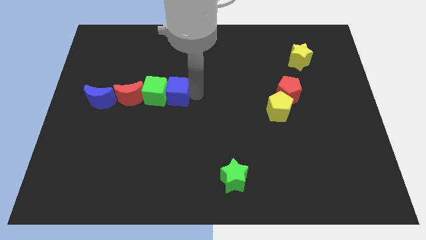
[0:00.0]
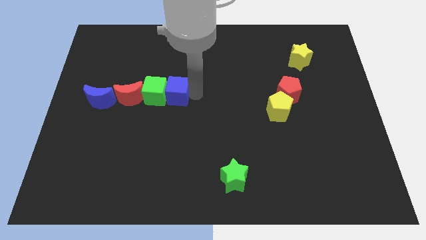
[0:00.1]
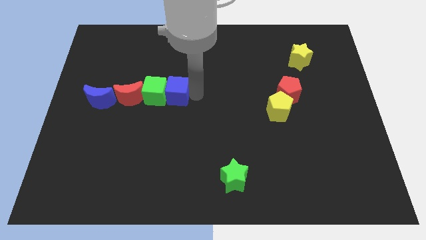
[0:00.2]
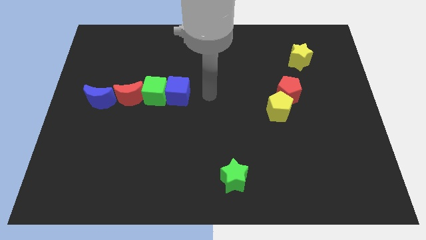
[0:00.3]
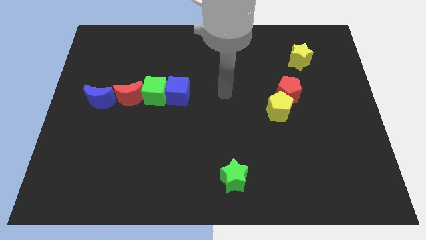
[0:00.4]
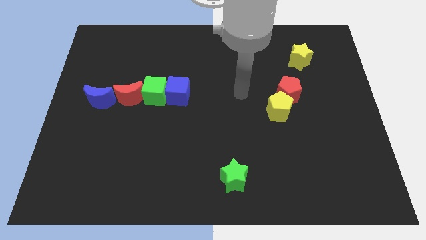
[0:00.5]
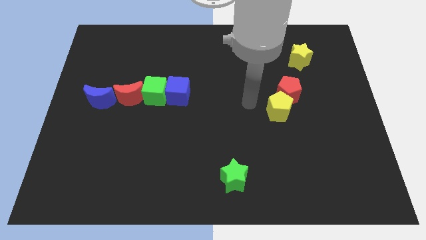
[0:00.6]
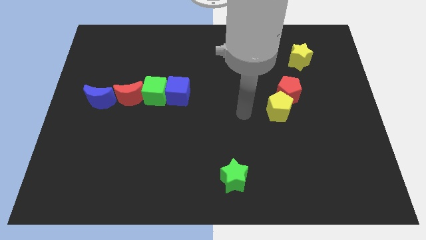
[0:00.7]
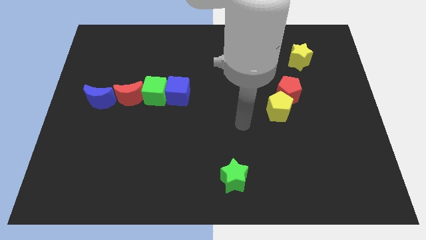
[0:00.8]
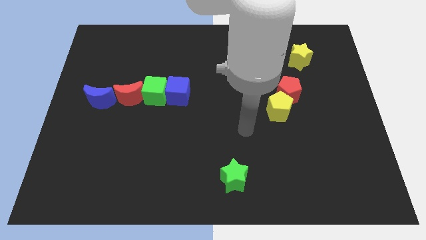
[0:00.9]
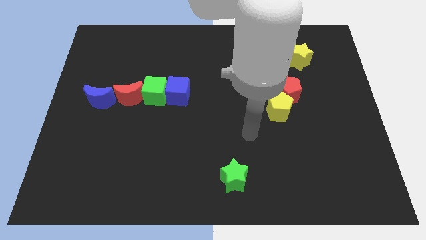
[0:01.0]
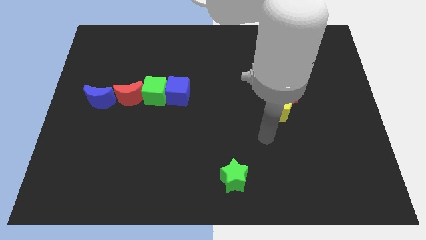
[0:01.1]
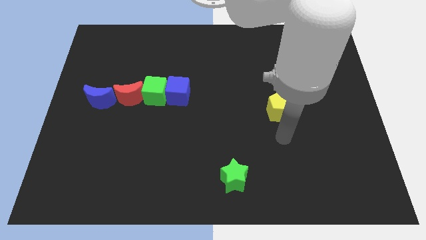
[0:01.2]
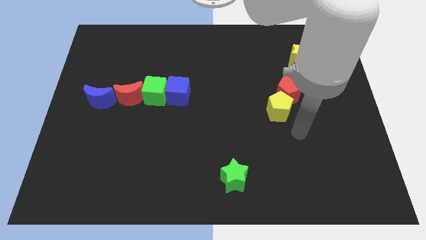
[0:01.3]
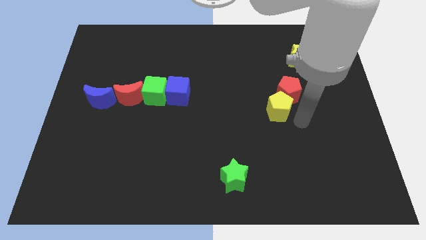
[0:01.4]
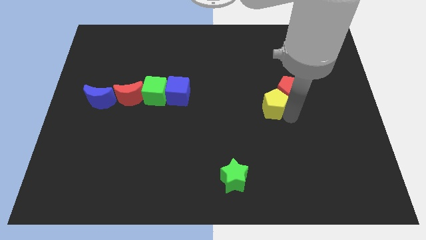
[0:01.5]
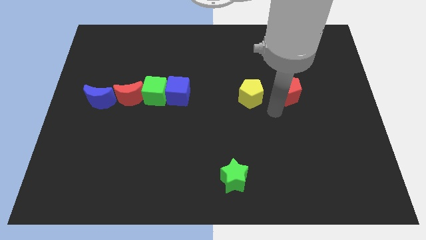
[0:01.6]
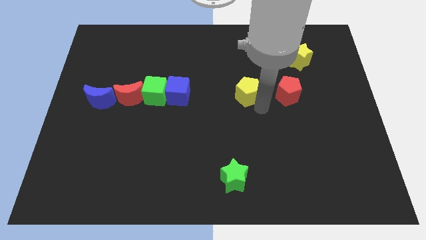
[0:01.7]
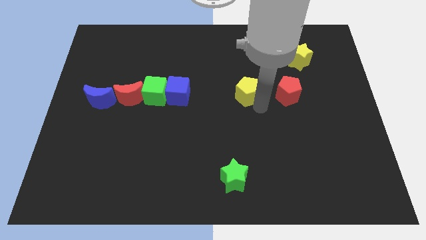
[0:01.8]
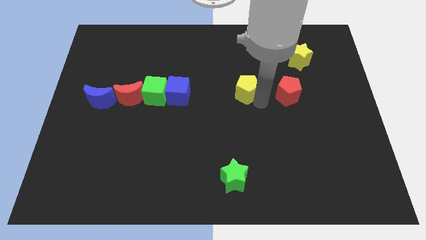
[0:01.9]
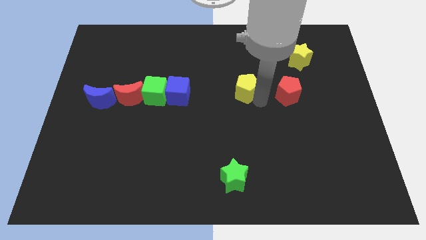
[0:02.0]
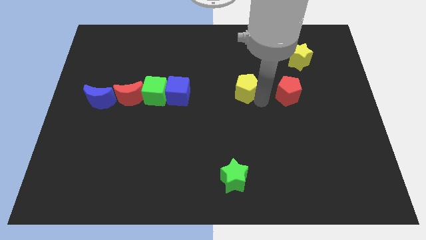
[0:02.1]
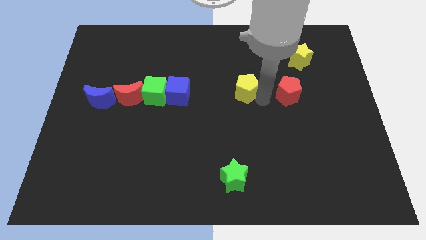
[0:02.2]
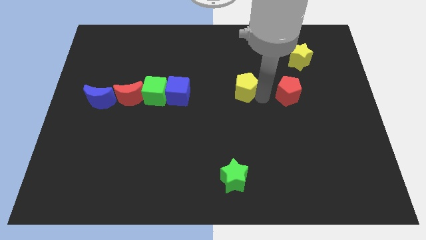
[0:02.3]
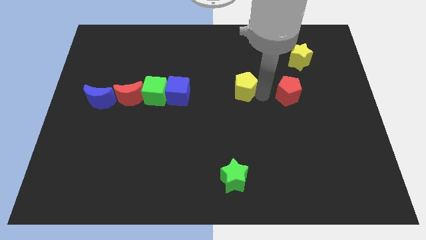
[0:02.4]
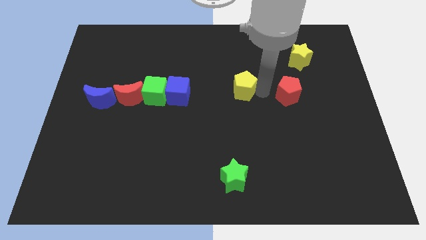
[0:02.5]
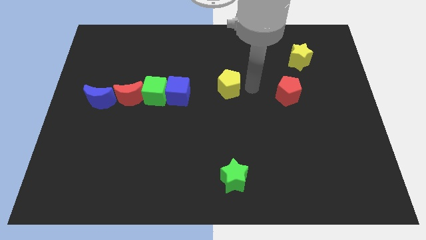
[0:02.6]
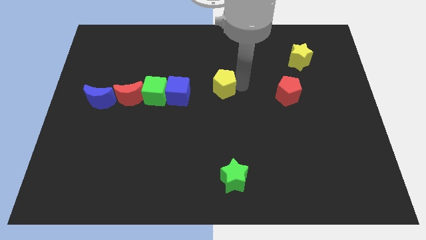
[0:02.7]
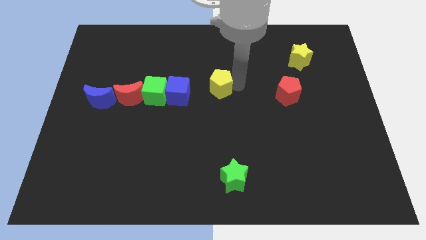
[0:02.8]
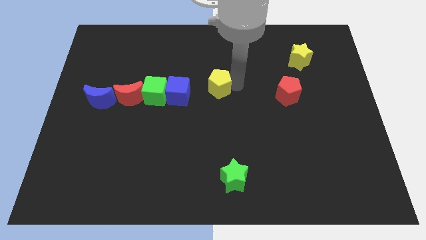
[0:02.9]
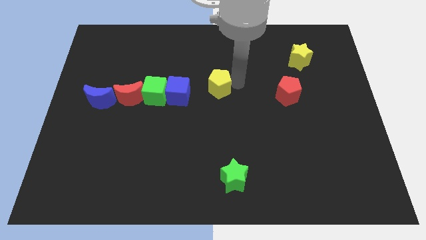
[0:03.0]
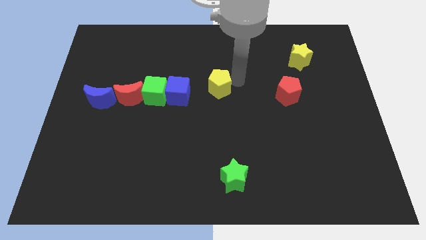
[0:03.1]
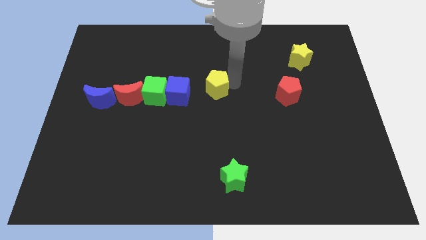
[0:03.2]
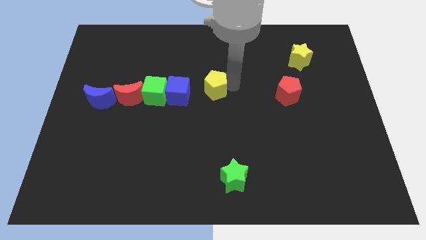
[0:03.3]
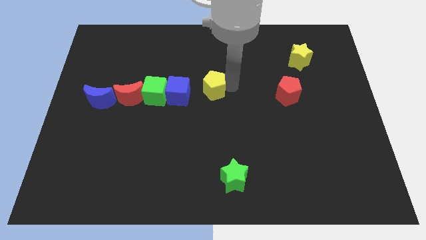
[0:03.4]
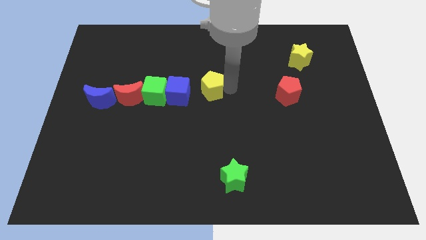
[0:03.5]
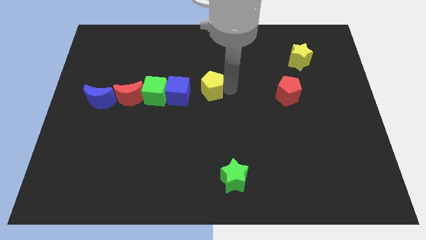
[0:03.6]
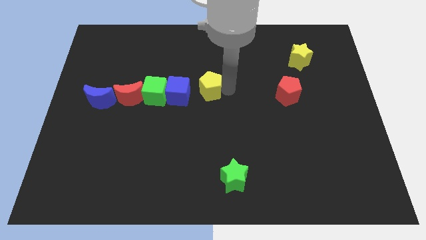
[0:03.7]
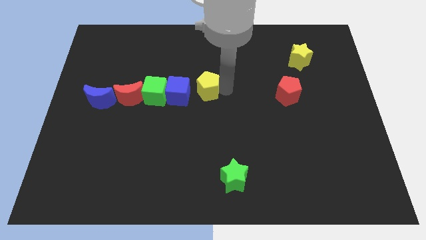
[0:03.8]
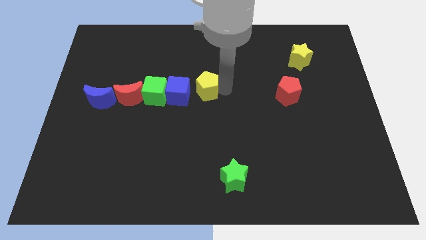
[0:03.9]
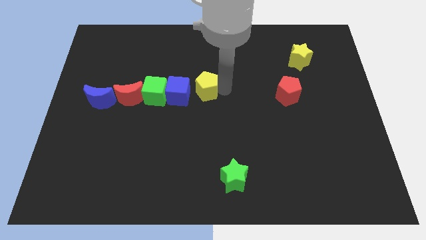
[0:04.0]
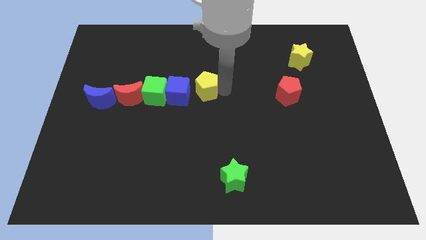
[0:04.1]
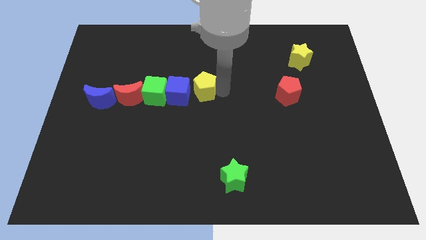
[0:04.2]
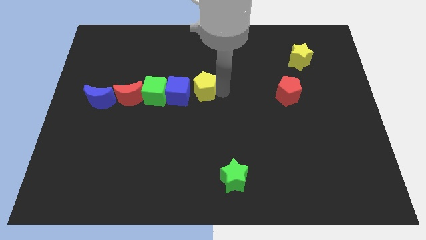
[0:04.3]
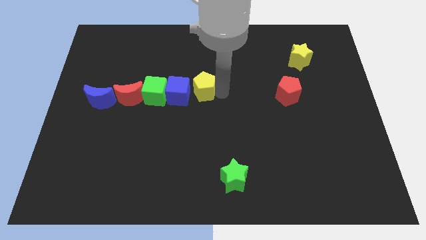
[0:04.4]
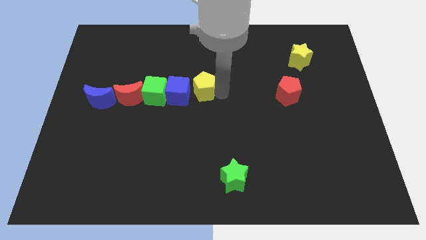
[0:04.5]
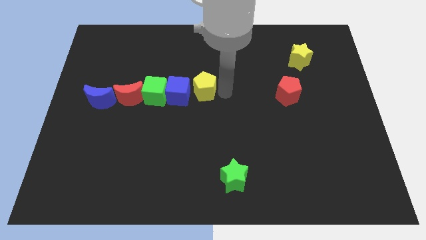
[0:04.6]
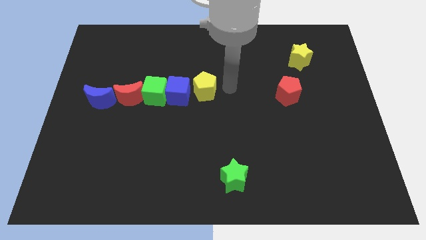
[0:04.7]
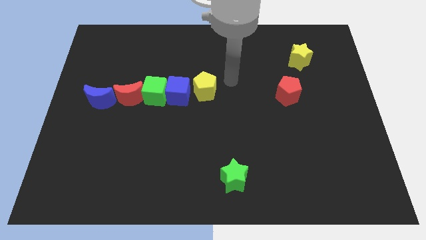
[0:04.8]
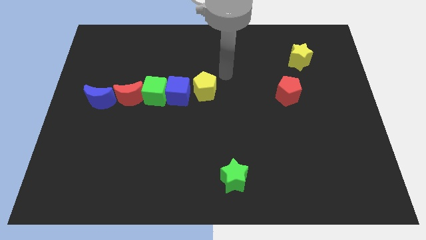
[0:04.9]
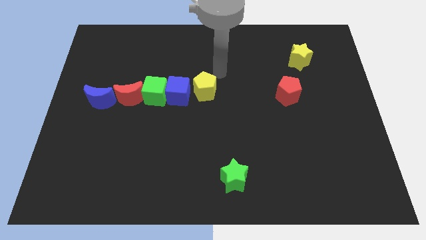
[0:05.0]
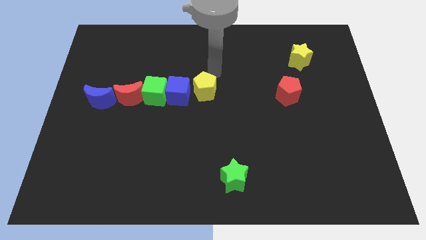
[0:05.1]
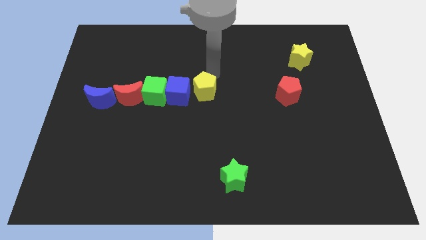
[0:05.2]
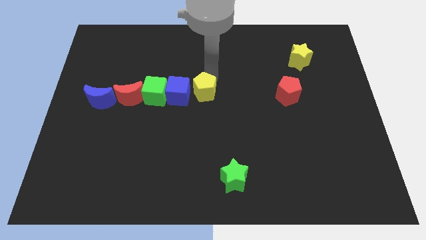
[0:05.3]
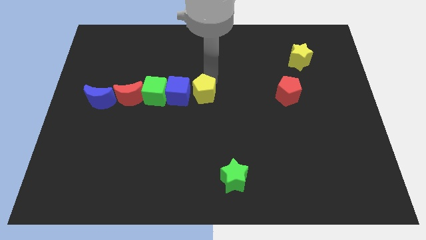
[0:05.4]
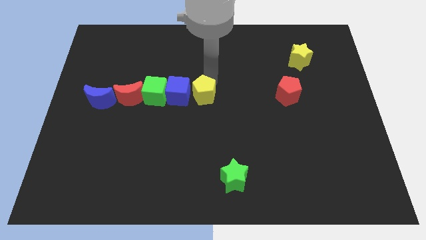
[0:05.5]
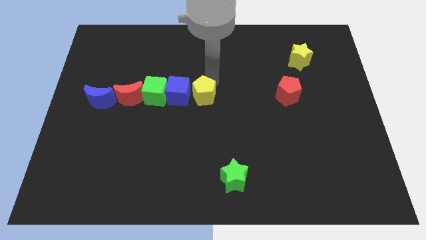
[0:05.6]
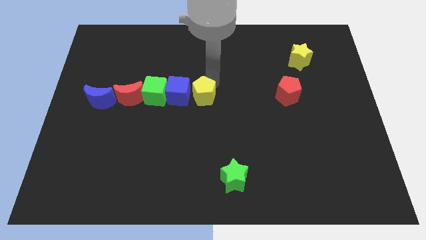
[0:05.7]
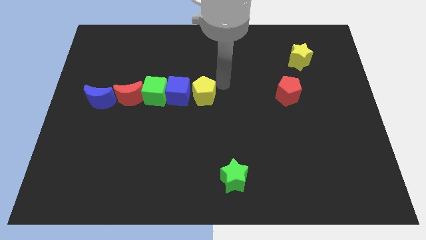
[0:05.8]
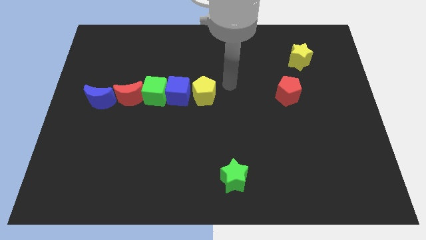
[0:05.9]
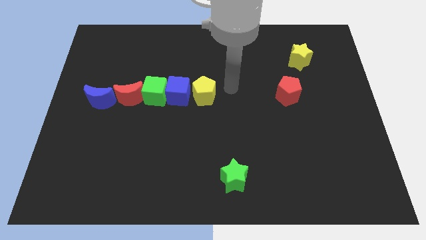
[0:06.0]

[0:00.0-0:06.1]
push the yellow pentagon to the right of the blue cube

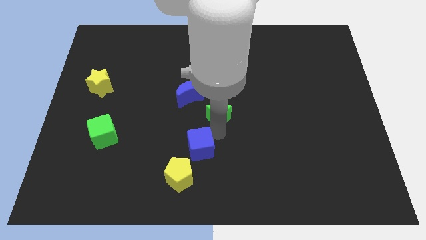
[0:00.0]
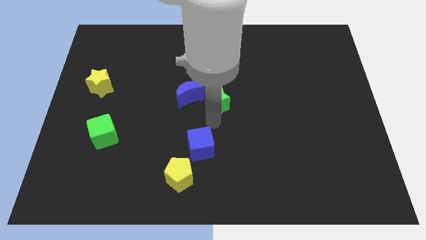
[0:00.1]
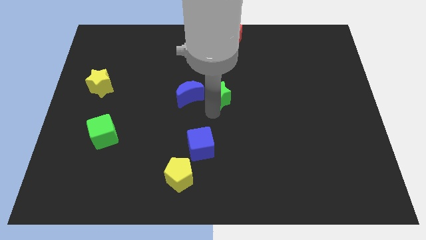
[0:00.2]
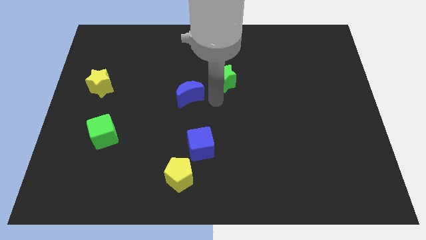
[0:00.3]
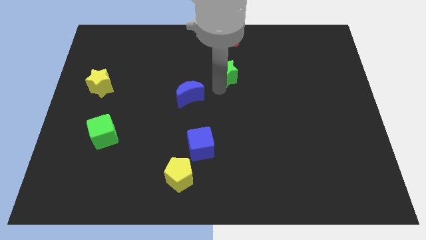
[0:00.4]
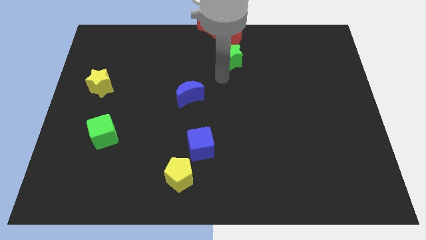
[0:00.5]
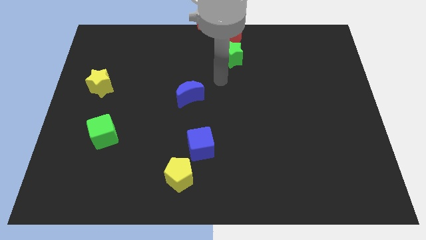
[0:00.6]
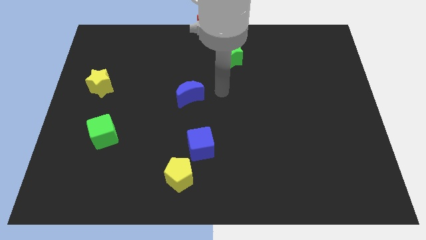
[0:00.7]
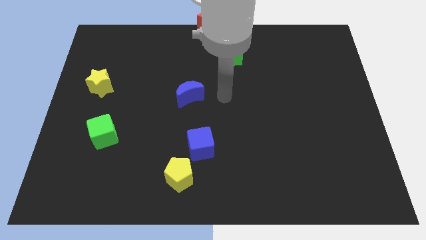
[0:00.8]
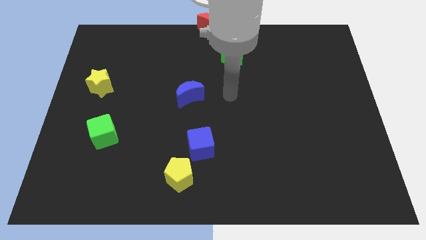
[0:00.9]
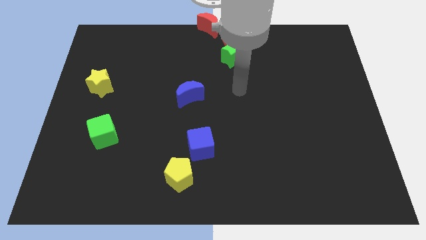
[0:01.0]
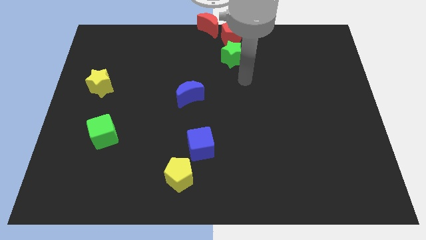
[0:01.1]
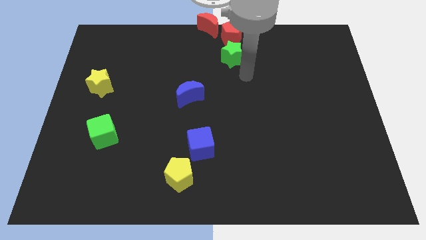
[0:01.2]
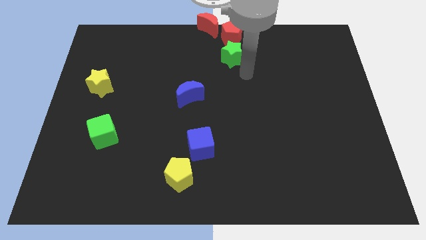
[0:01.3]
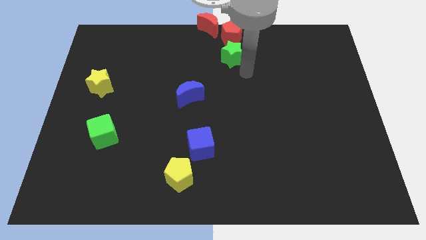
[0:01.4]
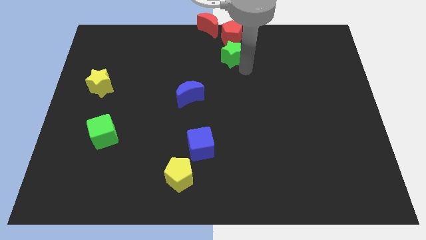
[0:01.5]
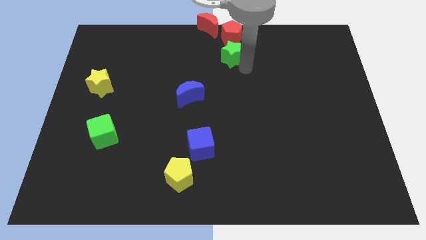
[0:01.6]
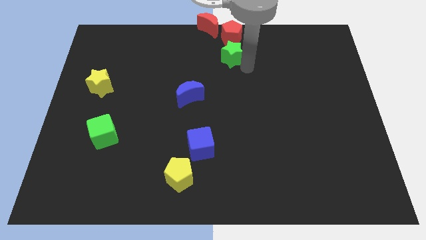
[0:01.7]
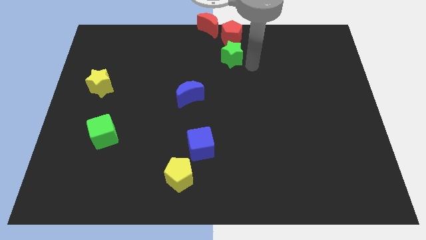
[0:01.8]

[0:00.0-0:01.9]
move the green star to the bottom of the red pentagon

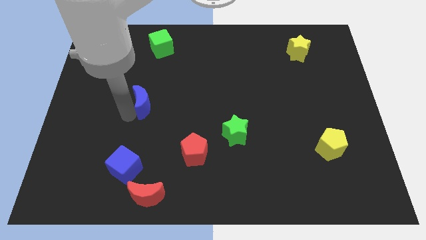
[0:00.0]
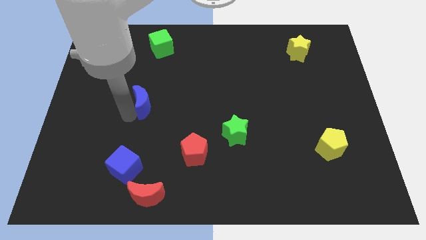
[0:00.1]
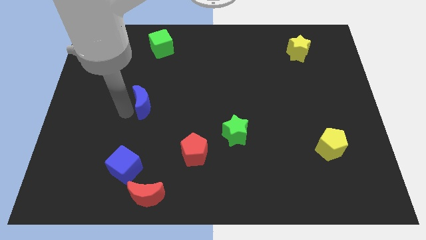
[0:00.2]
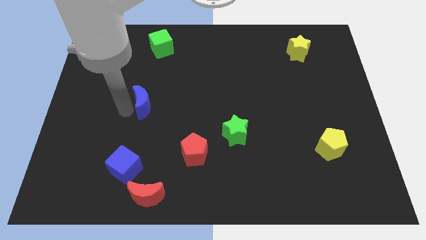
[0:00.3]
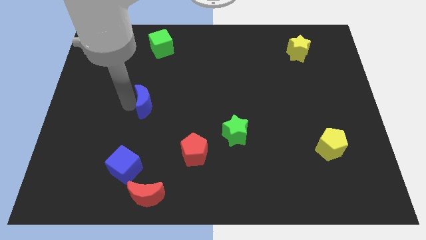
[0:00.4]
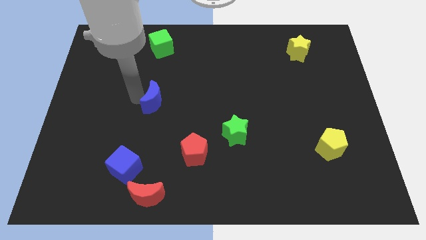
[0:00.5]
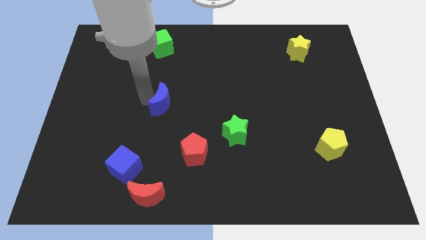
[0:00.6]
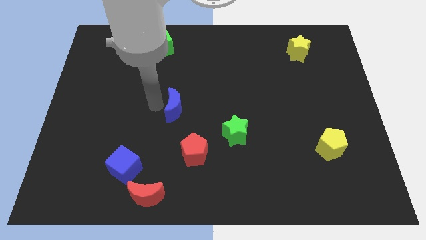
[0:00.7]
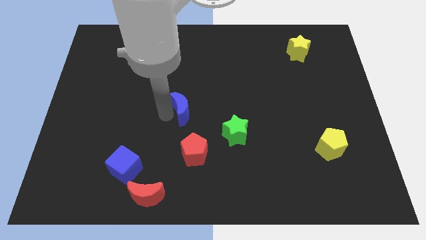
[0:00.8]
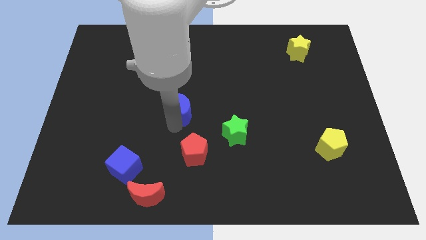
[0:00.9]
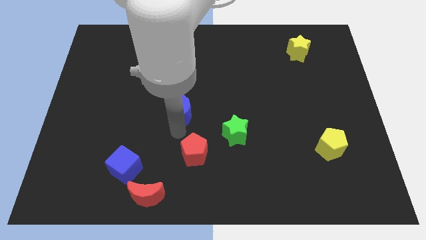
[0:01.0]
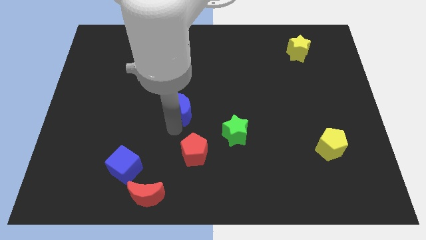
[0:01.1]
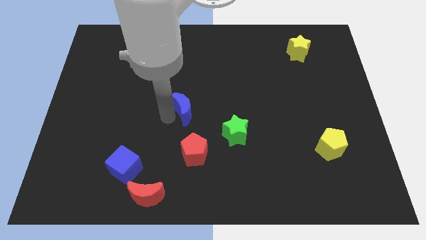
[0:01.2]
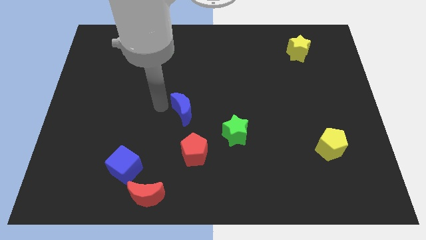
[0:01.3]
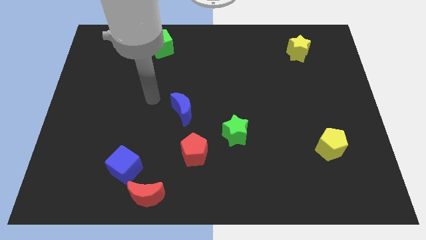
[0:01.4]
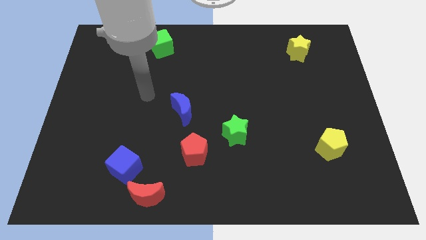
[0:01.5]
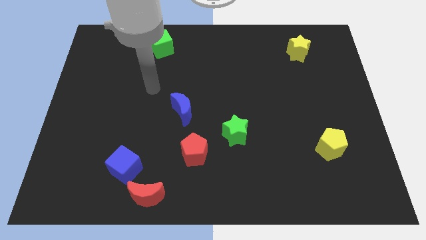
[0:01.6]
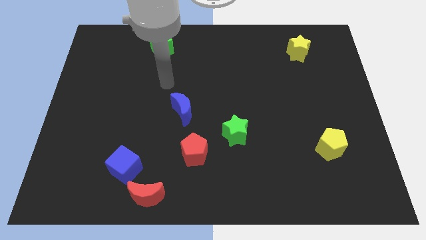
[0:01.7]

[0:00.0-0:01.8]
push blue moon to the top side of the red pentagon
